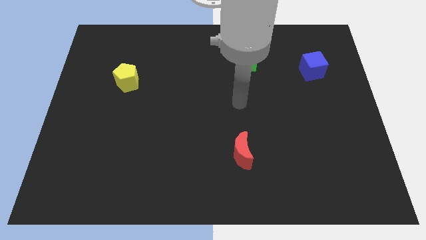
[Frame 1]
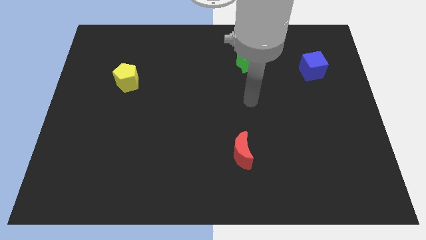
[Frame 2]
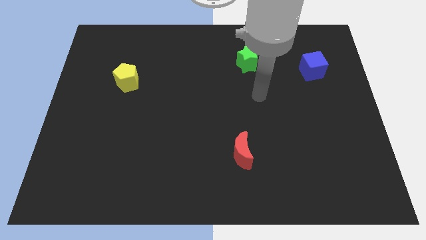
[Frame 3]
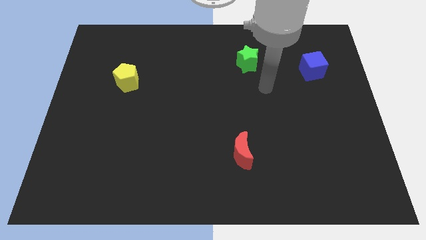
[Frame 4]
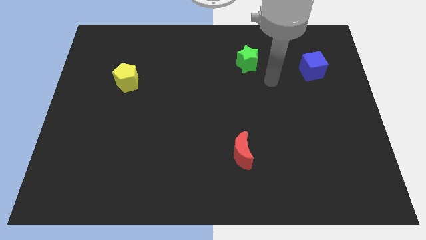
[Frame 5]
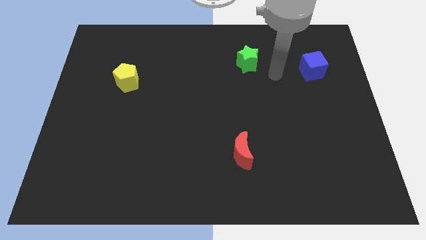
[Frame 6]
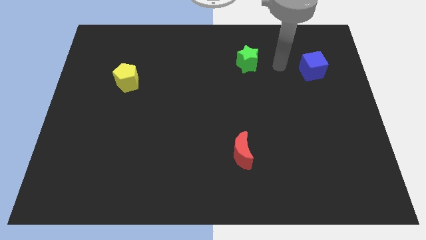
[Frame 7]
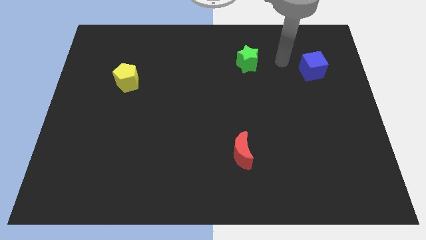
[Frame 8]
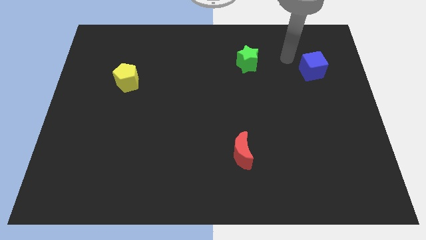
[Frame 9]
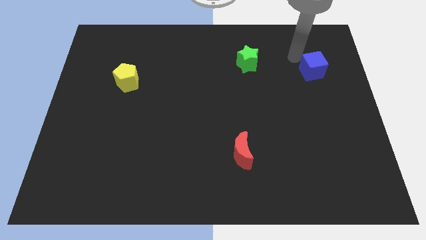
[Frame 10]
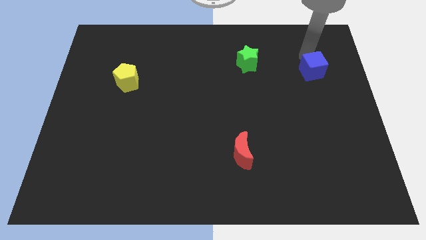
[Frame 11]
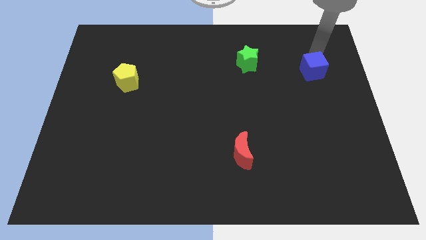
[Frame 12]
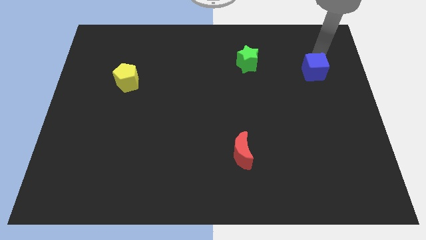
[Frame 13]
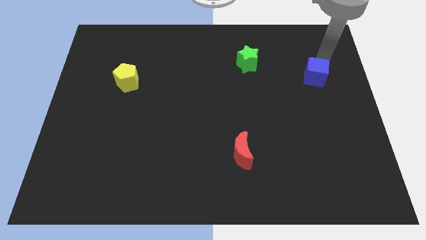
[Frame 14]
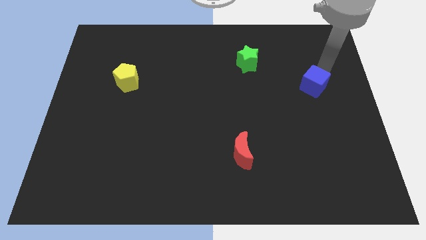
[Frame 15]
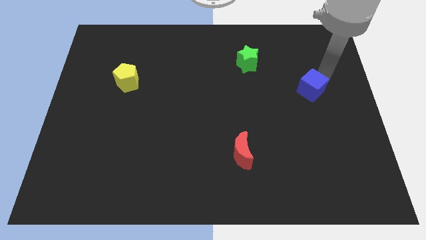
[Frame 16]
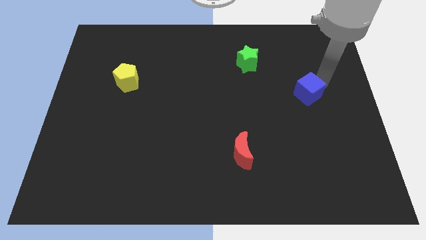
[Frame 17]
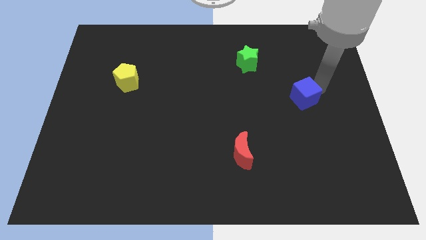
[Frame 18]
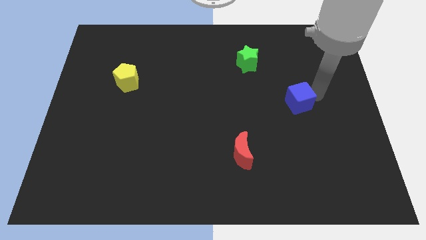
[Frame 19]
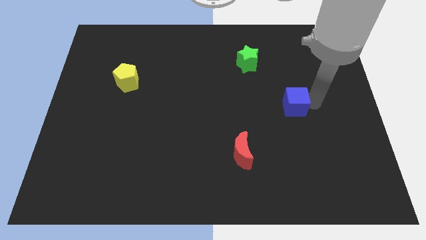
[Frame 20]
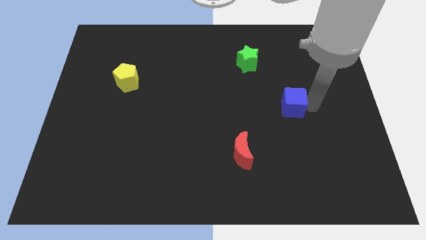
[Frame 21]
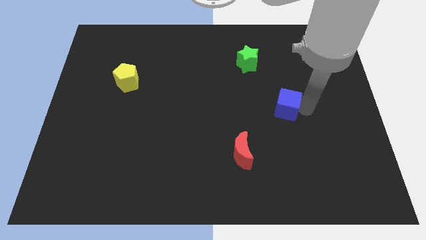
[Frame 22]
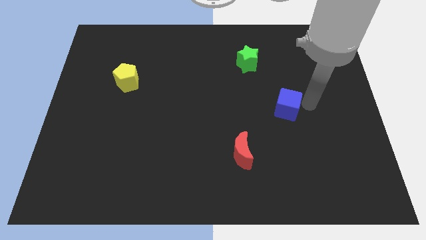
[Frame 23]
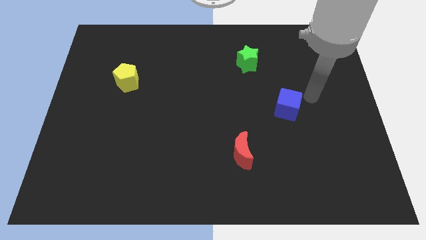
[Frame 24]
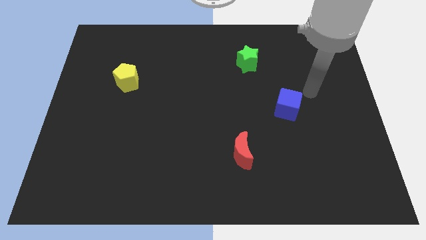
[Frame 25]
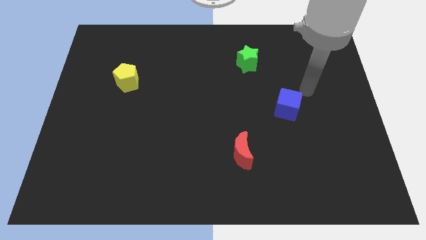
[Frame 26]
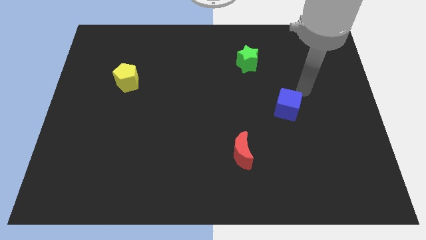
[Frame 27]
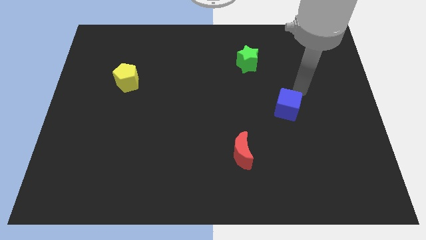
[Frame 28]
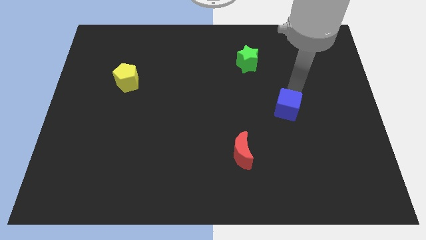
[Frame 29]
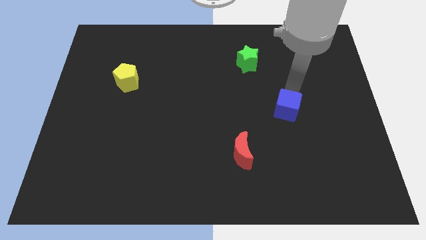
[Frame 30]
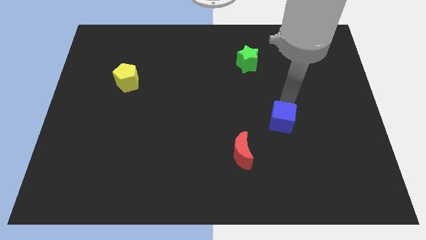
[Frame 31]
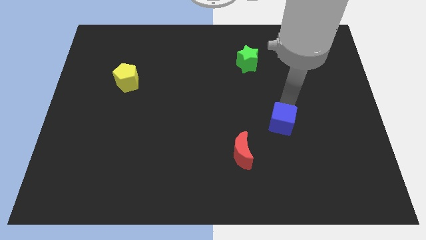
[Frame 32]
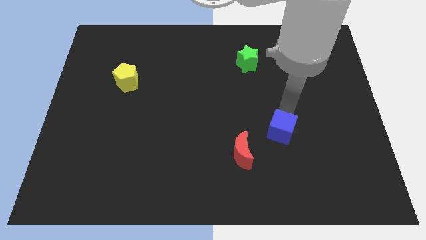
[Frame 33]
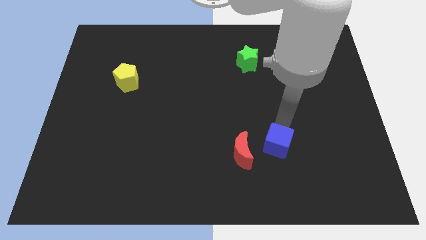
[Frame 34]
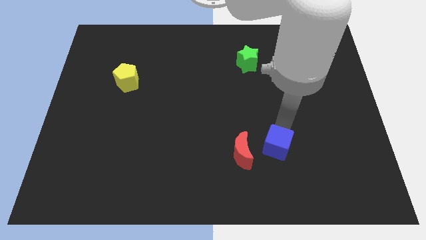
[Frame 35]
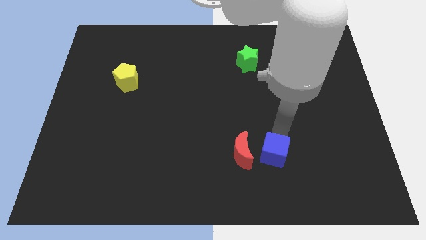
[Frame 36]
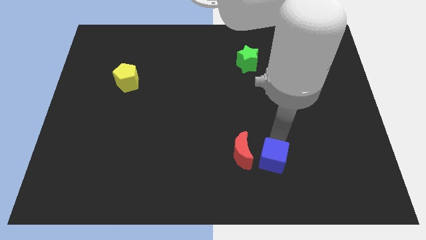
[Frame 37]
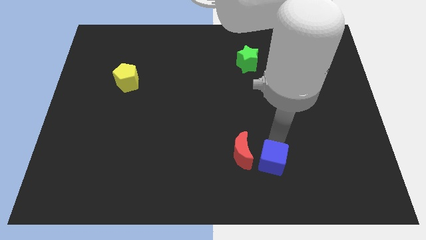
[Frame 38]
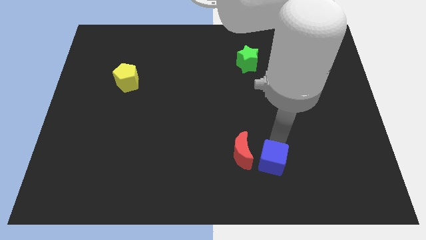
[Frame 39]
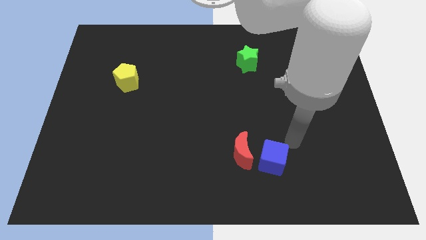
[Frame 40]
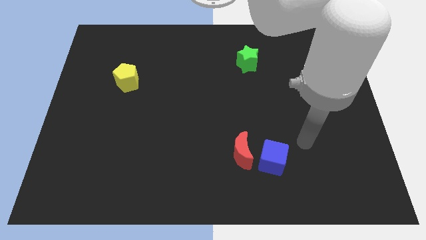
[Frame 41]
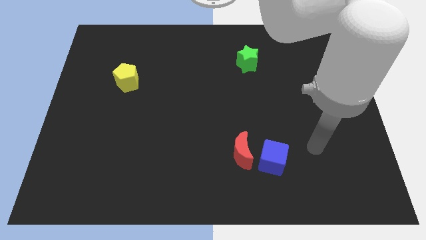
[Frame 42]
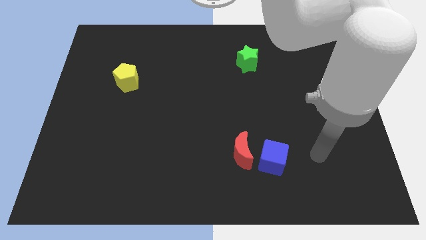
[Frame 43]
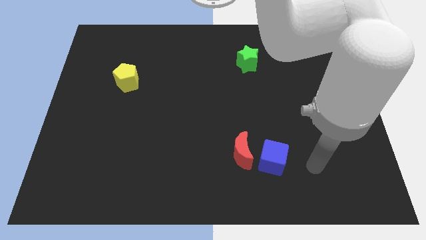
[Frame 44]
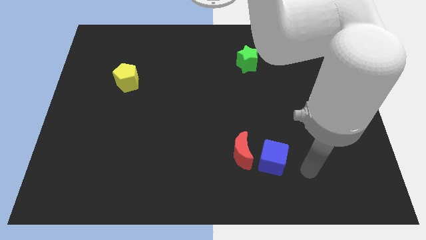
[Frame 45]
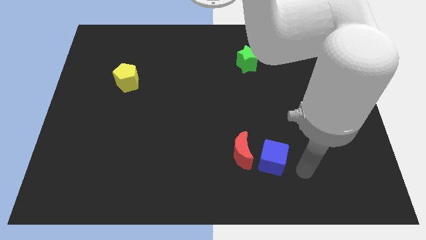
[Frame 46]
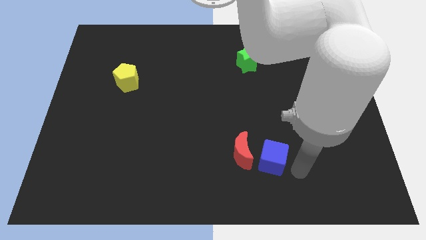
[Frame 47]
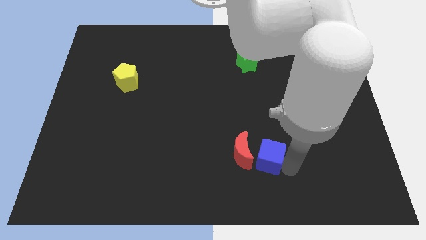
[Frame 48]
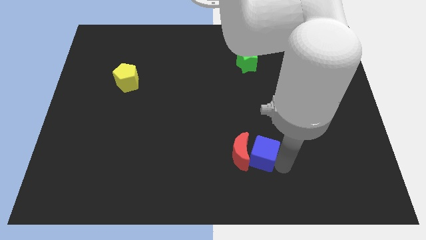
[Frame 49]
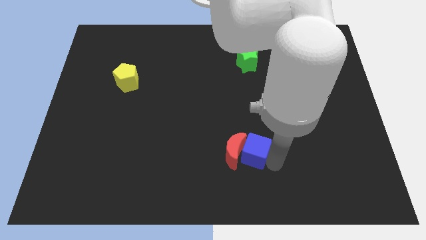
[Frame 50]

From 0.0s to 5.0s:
put the blue cube to the red moon

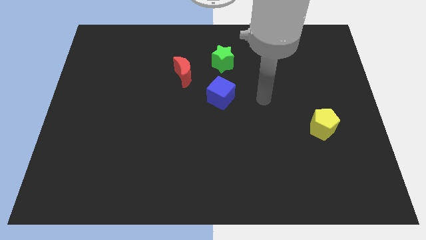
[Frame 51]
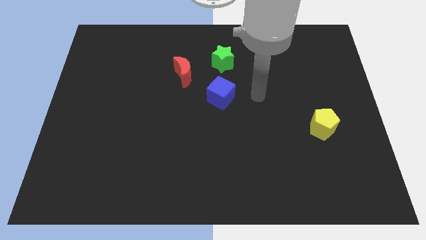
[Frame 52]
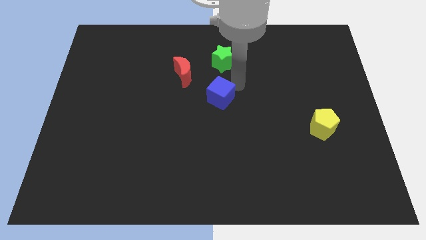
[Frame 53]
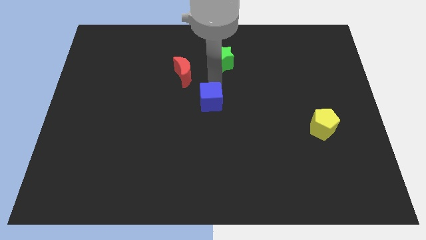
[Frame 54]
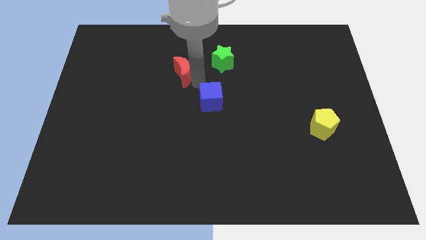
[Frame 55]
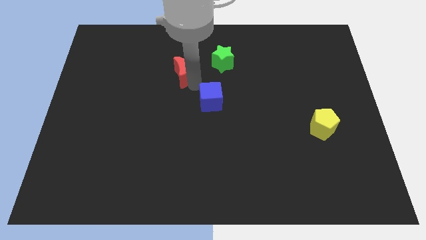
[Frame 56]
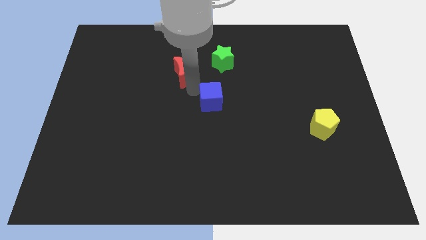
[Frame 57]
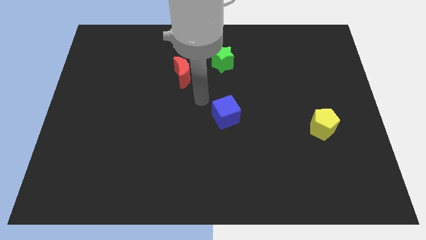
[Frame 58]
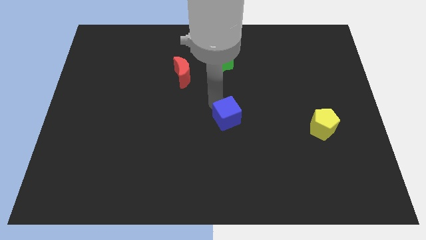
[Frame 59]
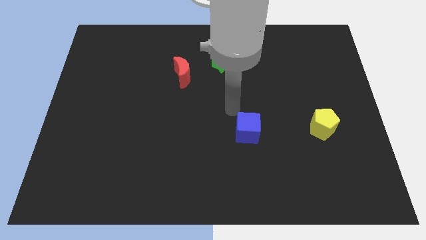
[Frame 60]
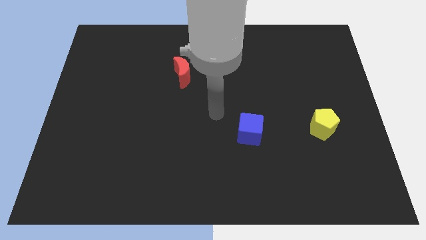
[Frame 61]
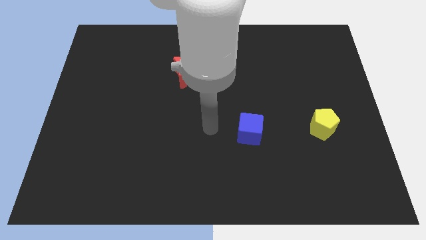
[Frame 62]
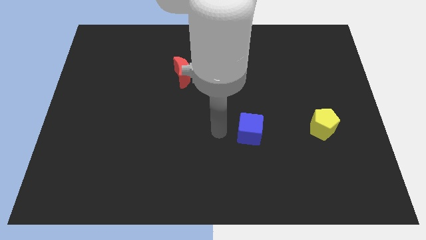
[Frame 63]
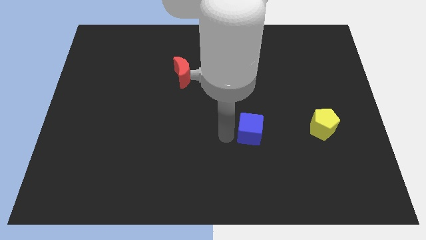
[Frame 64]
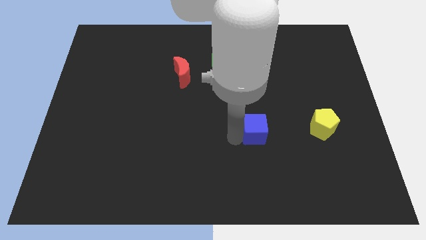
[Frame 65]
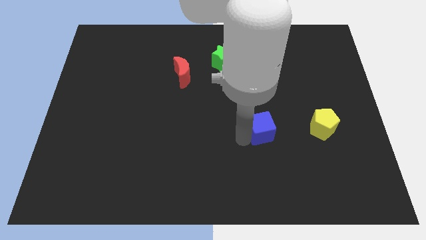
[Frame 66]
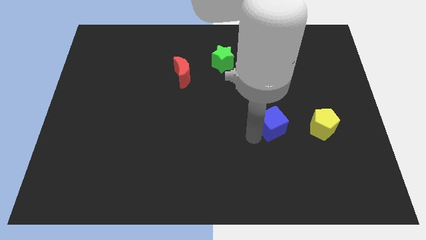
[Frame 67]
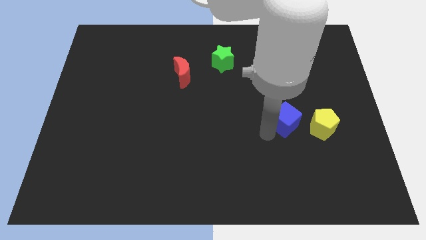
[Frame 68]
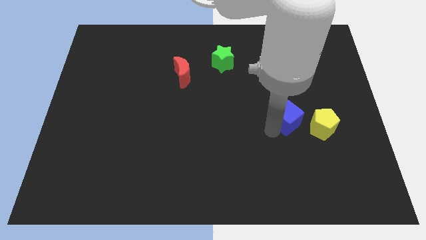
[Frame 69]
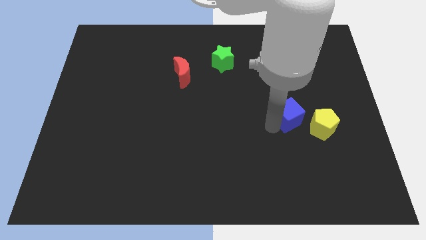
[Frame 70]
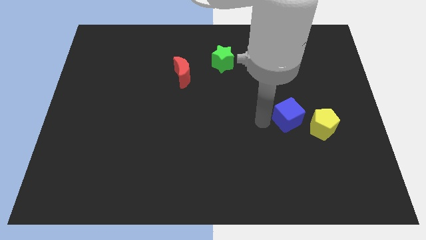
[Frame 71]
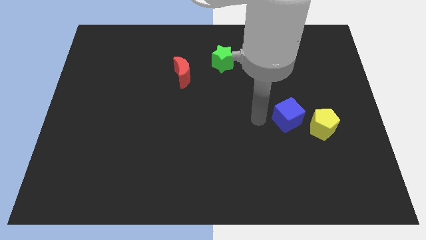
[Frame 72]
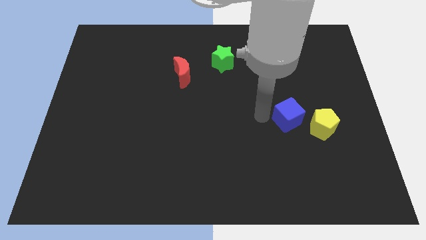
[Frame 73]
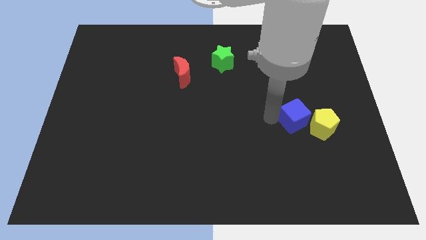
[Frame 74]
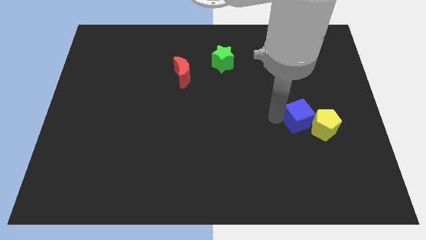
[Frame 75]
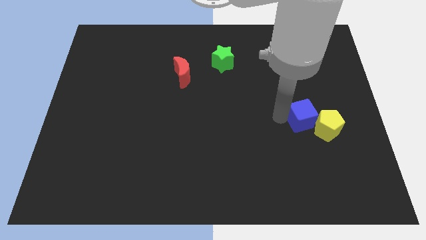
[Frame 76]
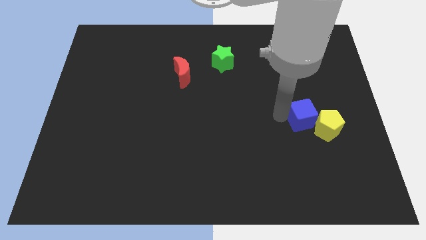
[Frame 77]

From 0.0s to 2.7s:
push the blue block towards the pentagon

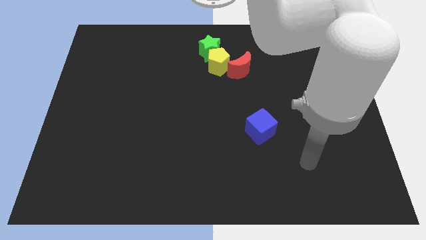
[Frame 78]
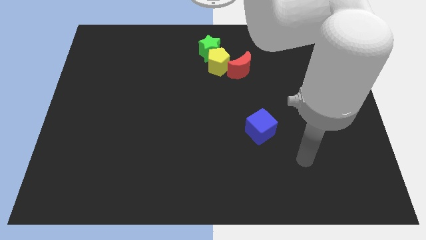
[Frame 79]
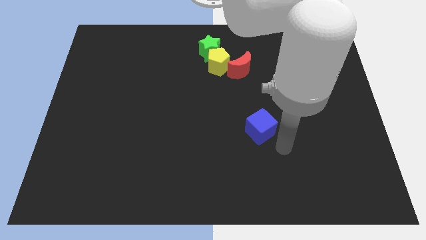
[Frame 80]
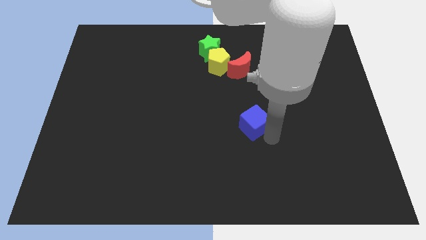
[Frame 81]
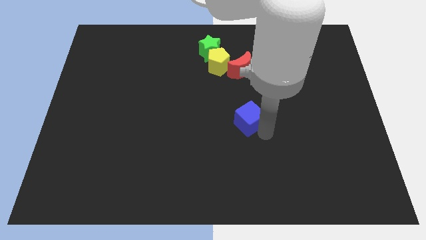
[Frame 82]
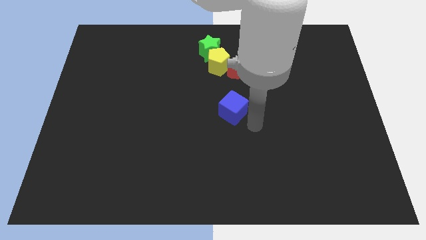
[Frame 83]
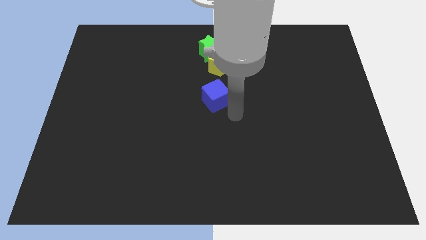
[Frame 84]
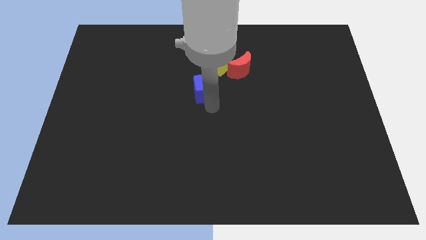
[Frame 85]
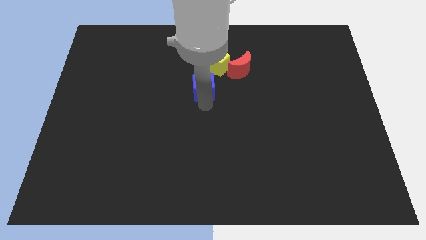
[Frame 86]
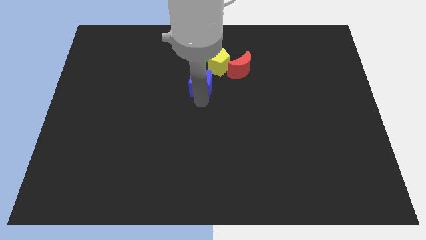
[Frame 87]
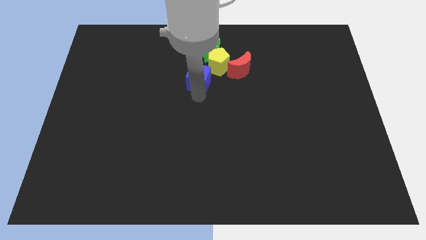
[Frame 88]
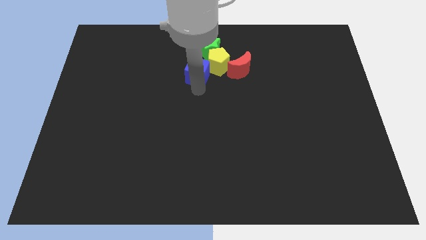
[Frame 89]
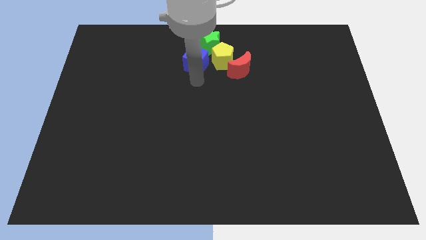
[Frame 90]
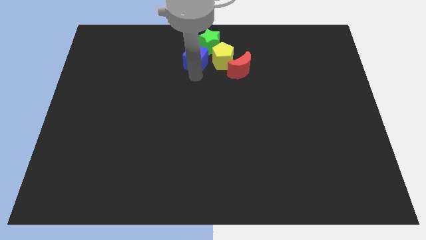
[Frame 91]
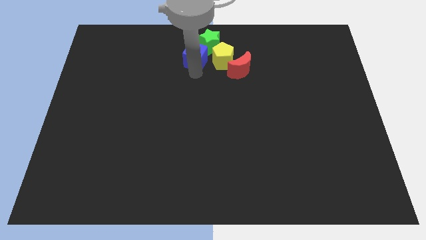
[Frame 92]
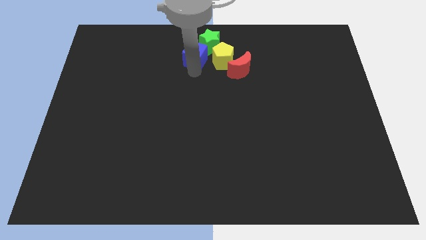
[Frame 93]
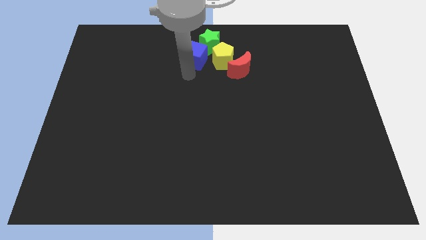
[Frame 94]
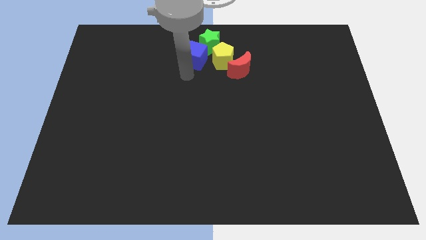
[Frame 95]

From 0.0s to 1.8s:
move the blue block close to the star
